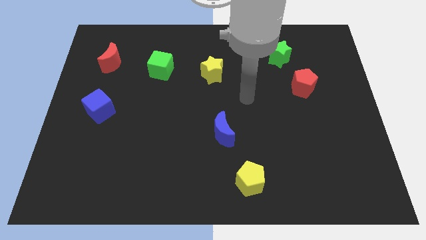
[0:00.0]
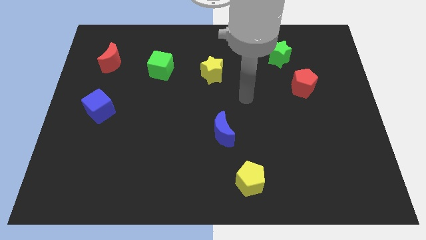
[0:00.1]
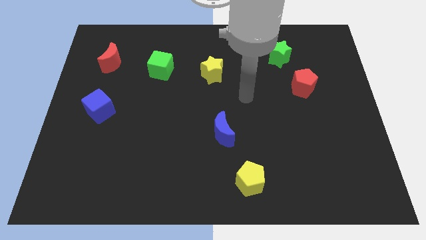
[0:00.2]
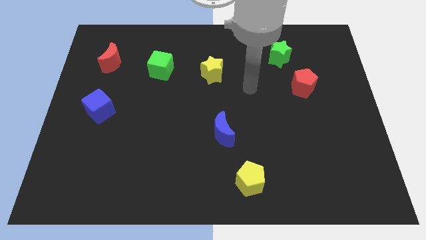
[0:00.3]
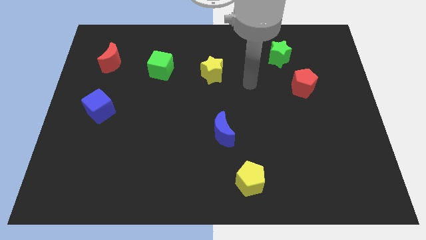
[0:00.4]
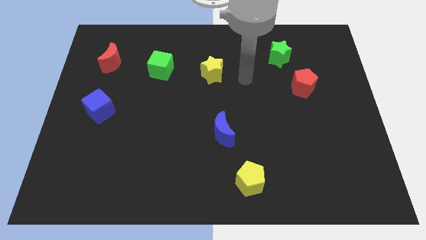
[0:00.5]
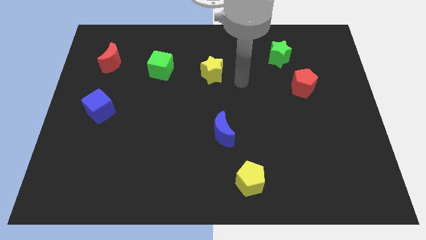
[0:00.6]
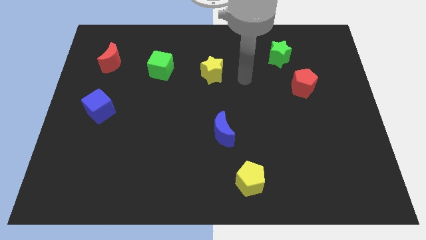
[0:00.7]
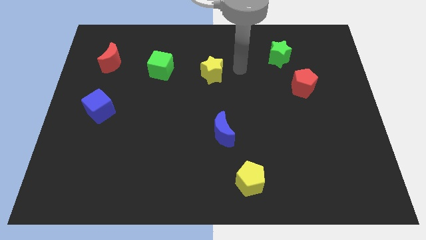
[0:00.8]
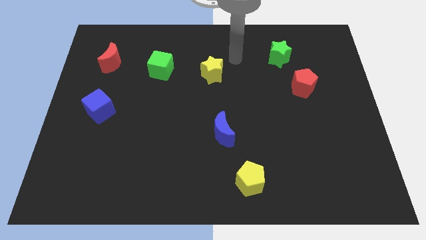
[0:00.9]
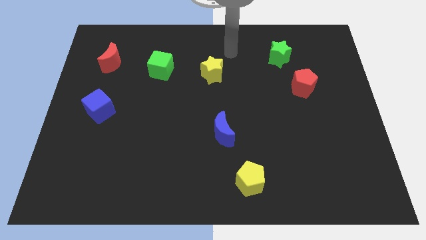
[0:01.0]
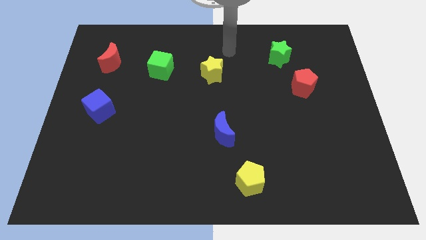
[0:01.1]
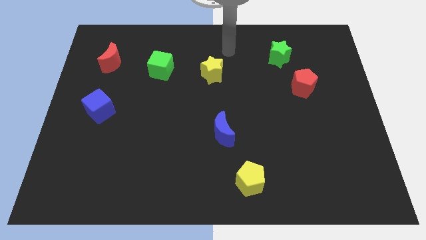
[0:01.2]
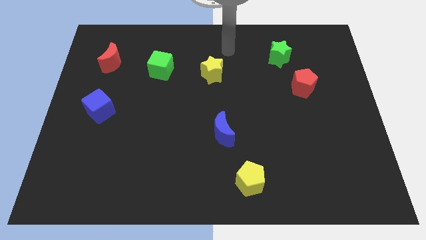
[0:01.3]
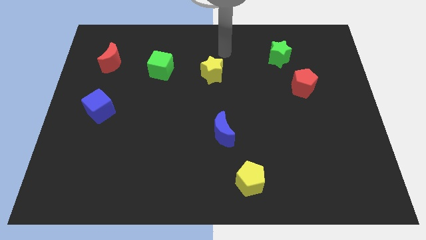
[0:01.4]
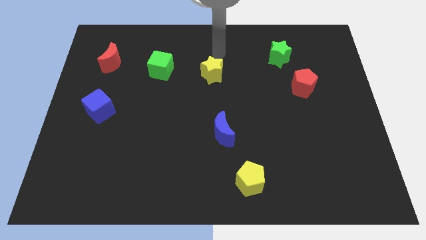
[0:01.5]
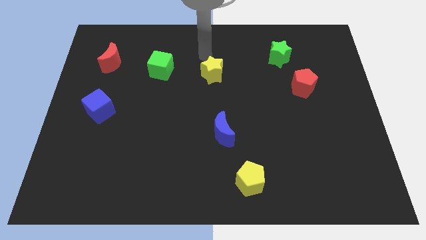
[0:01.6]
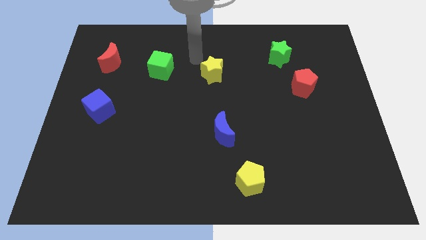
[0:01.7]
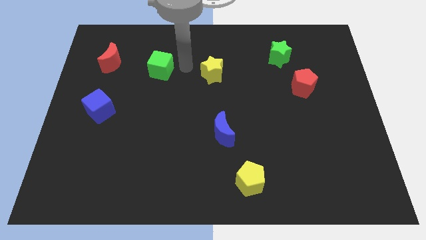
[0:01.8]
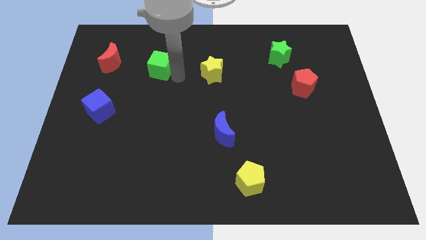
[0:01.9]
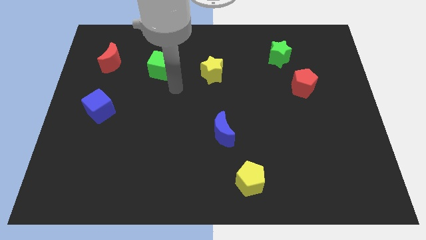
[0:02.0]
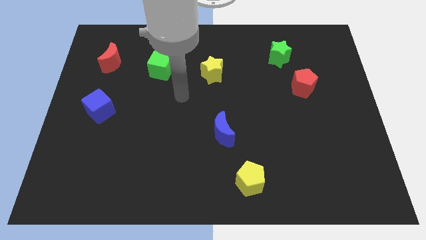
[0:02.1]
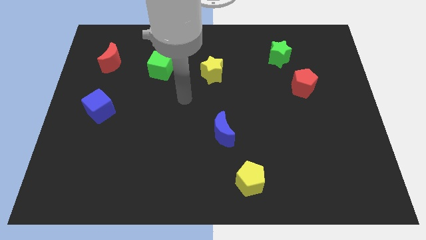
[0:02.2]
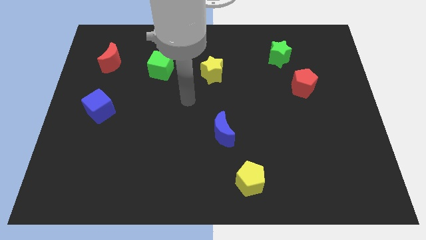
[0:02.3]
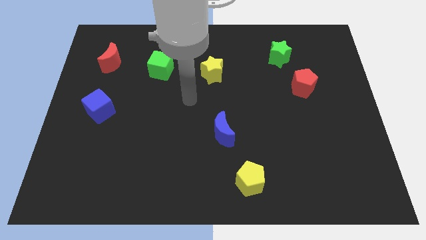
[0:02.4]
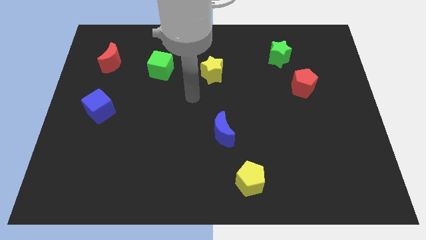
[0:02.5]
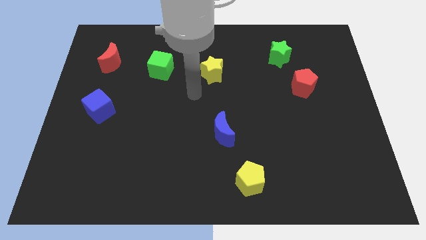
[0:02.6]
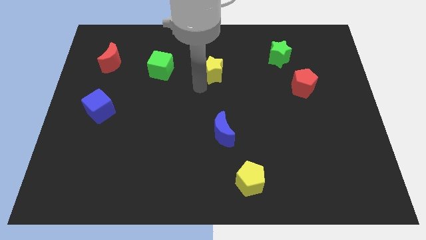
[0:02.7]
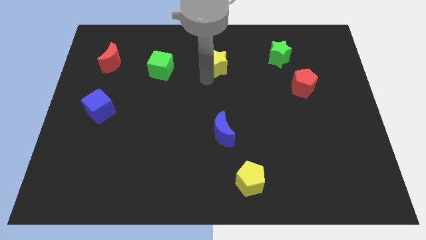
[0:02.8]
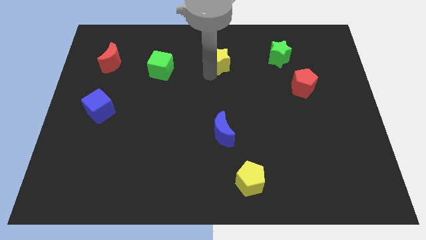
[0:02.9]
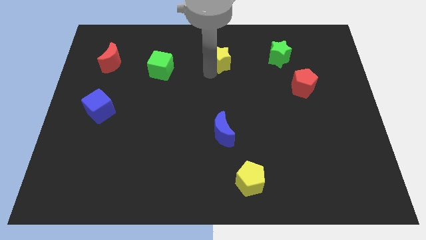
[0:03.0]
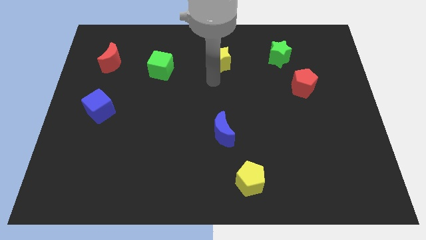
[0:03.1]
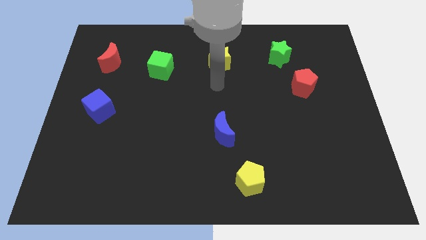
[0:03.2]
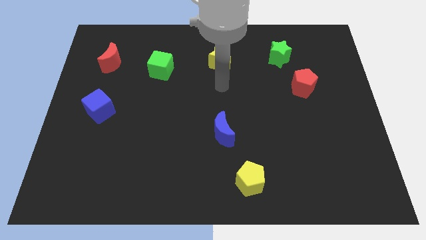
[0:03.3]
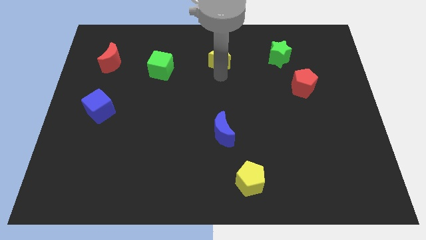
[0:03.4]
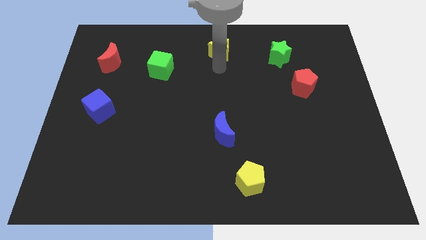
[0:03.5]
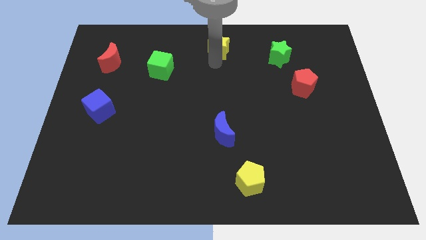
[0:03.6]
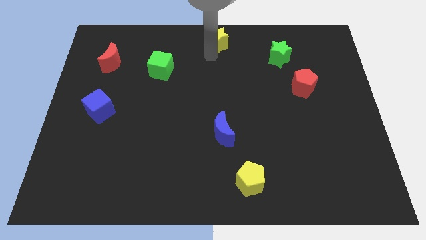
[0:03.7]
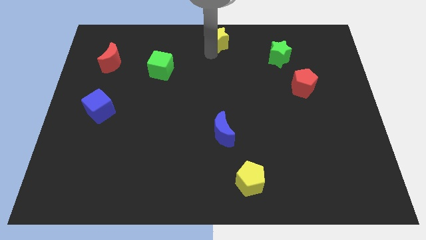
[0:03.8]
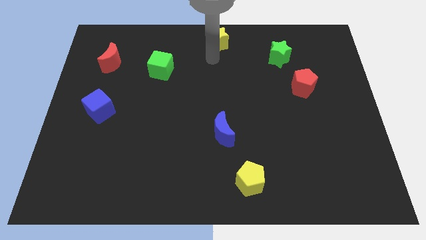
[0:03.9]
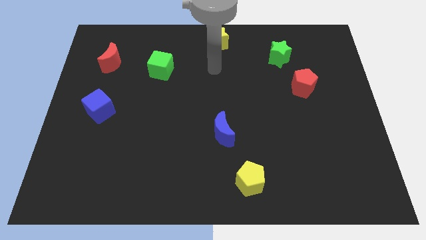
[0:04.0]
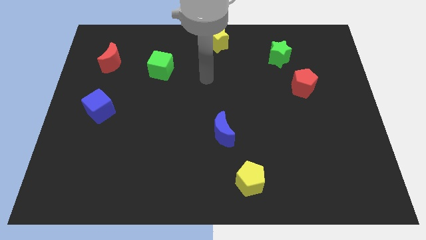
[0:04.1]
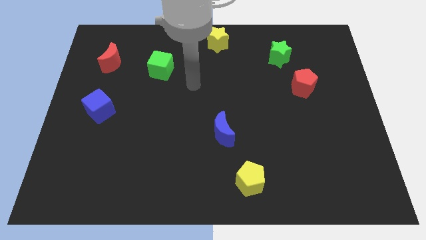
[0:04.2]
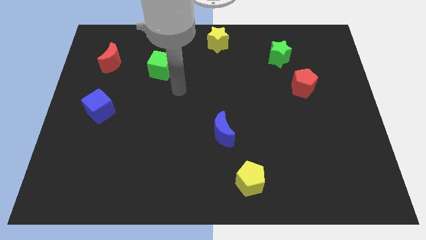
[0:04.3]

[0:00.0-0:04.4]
move the yellow star to the top of the board

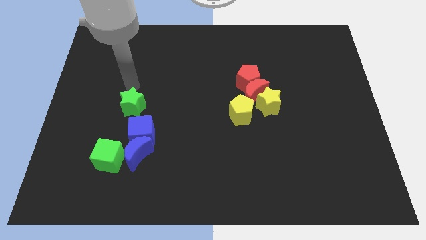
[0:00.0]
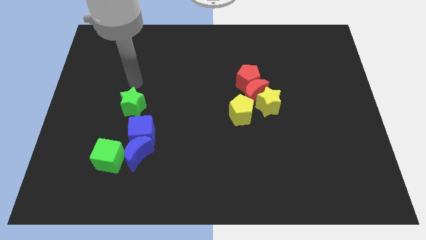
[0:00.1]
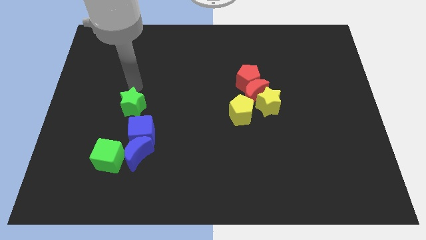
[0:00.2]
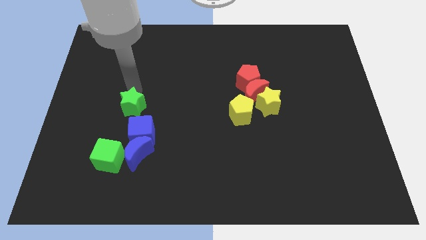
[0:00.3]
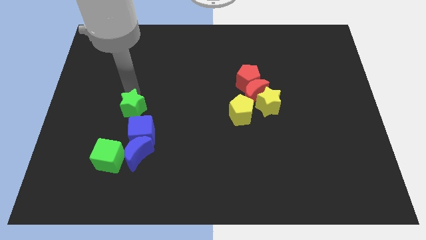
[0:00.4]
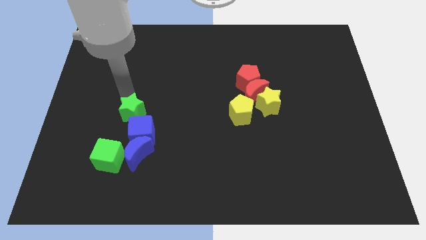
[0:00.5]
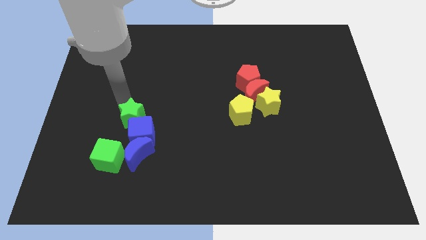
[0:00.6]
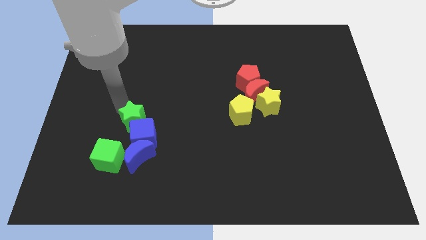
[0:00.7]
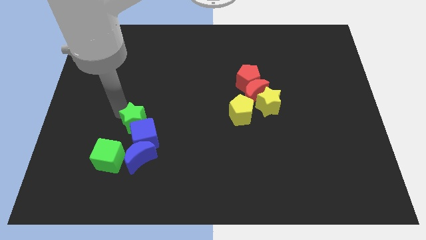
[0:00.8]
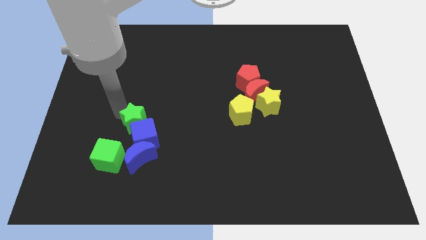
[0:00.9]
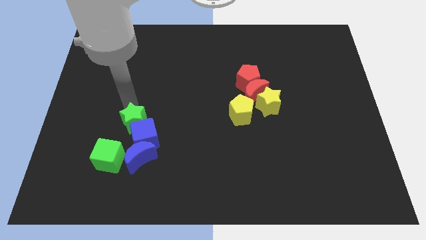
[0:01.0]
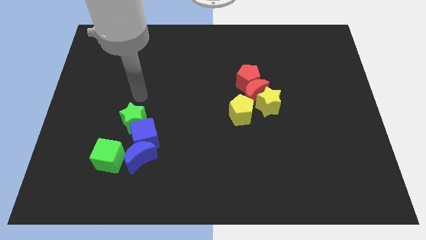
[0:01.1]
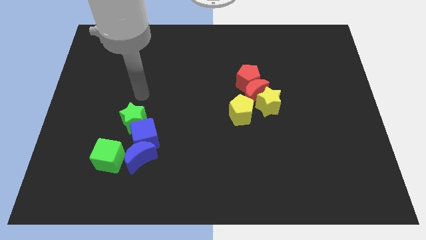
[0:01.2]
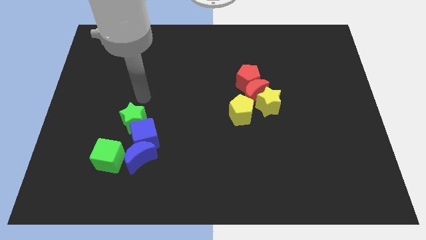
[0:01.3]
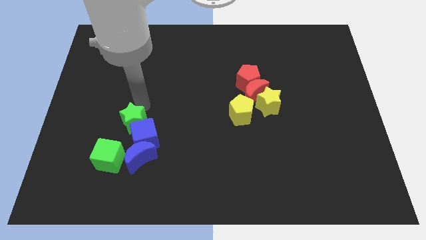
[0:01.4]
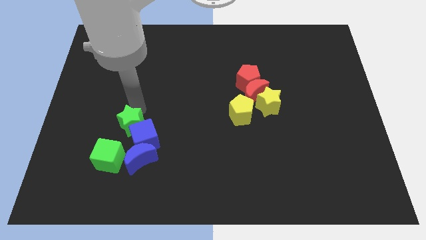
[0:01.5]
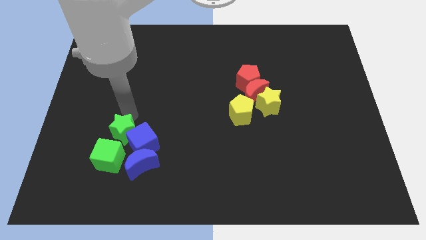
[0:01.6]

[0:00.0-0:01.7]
move the green star into the blue cube

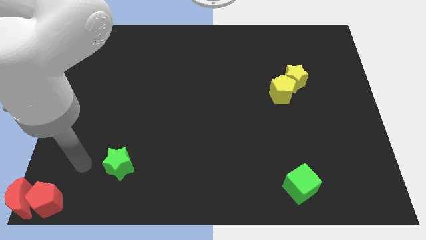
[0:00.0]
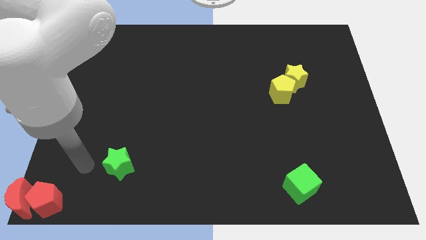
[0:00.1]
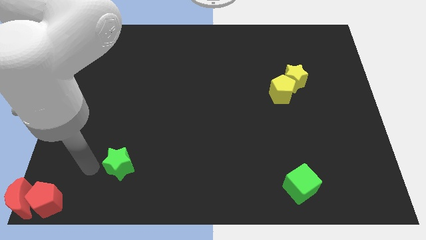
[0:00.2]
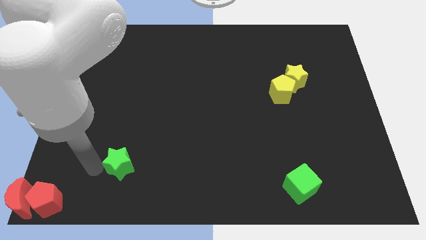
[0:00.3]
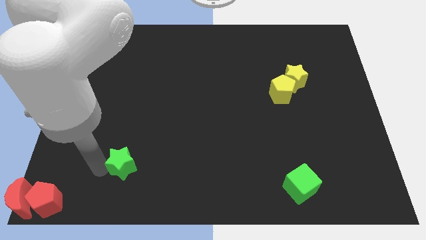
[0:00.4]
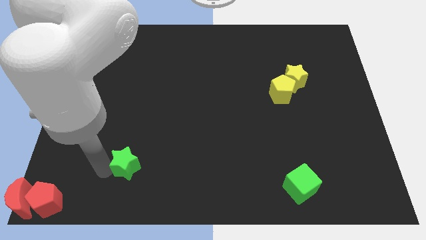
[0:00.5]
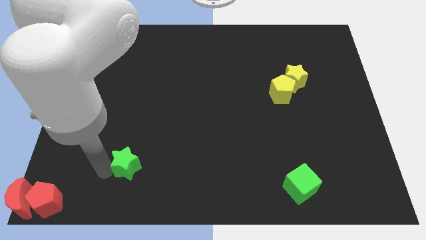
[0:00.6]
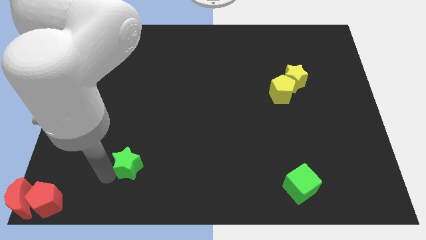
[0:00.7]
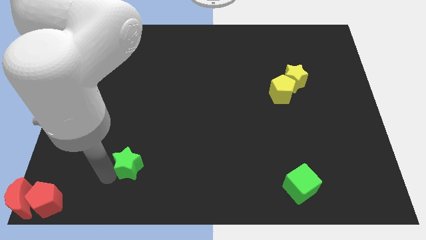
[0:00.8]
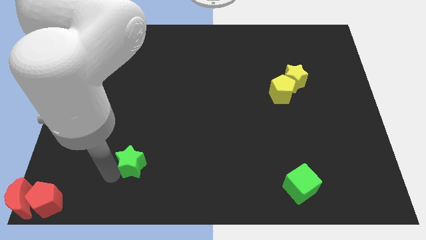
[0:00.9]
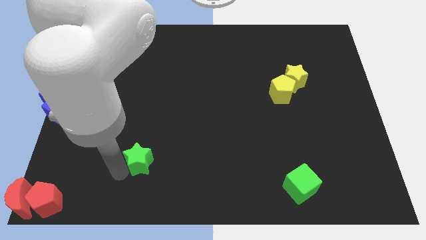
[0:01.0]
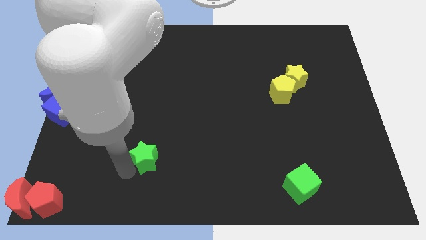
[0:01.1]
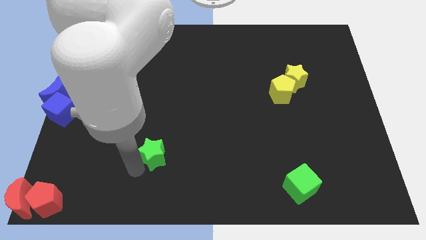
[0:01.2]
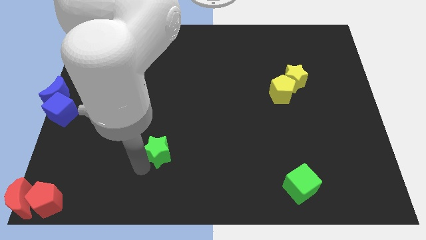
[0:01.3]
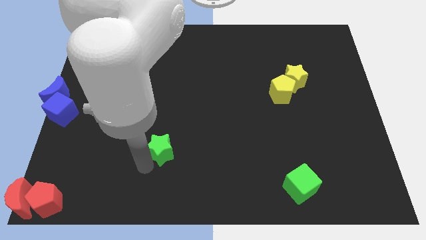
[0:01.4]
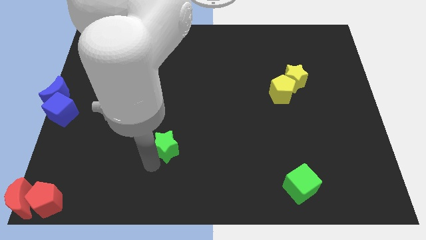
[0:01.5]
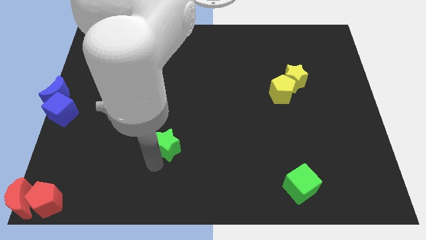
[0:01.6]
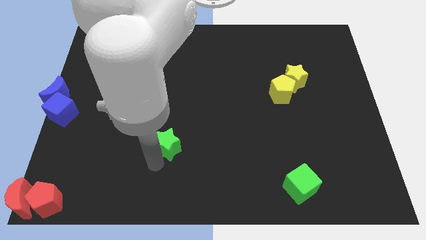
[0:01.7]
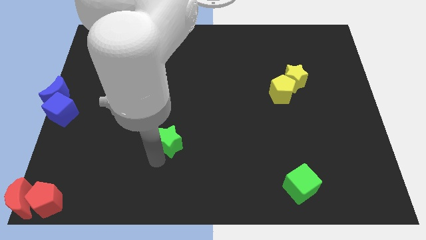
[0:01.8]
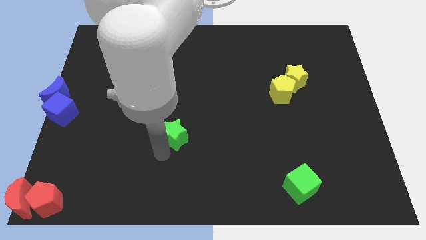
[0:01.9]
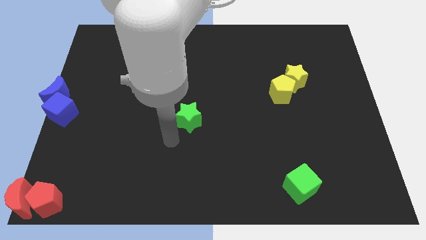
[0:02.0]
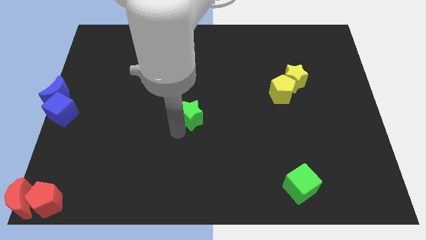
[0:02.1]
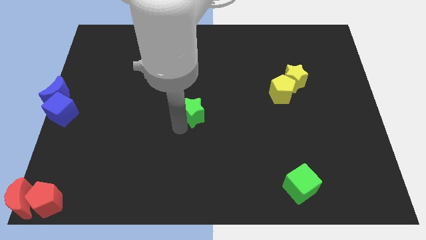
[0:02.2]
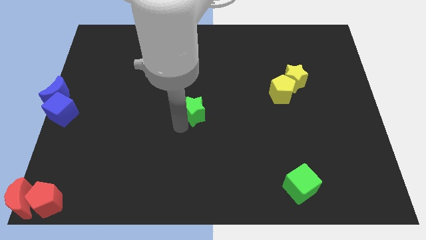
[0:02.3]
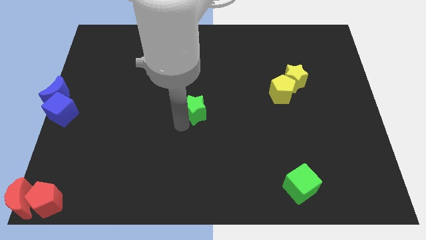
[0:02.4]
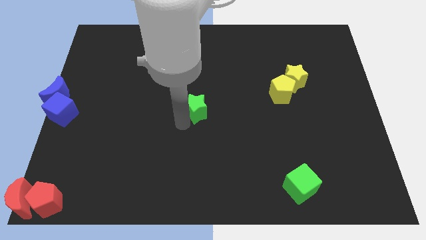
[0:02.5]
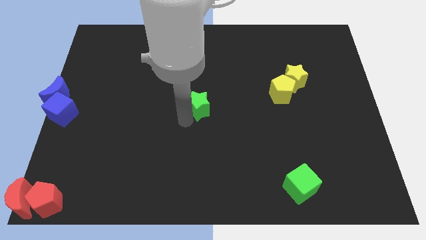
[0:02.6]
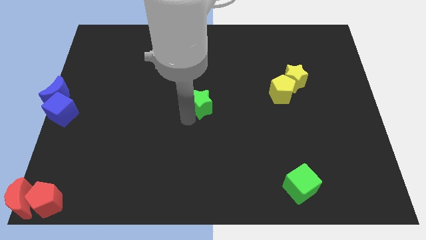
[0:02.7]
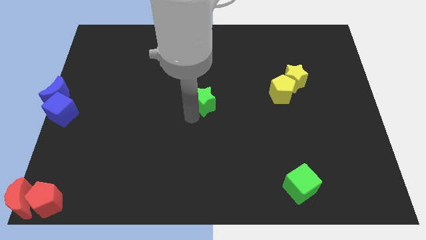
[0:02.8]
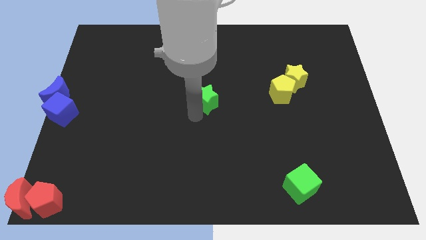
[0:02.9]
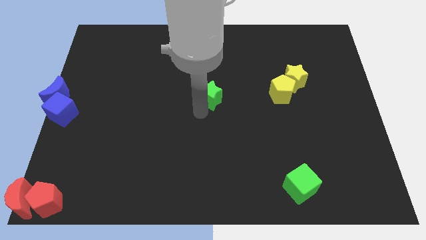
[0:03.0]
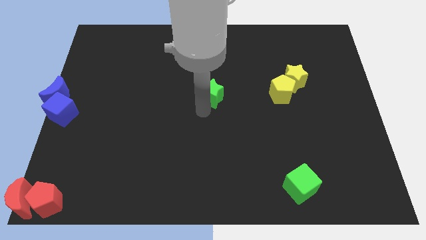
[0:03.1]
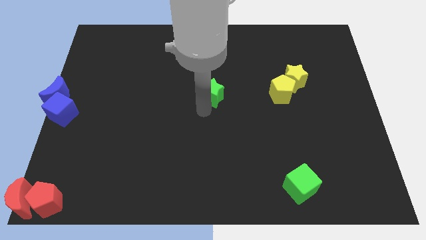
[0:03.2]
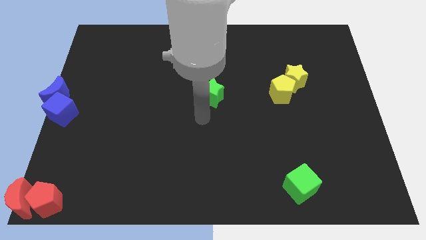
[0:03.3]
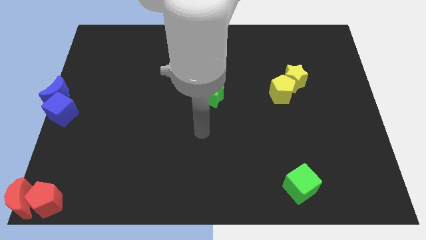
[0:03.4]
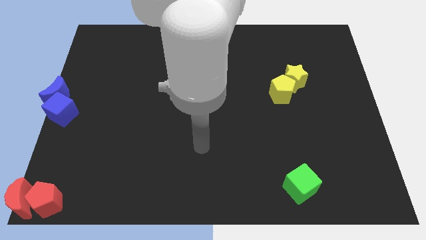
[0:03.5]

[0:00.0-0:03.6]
place the green star to the center of board
